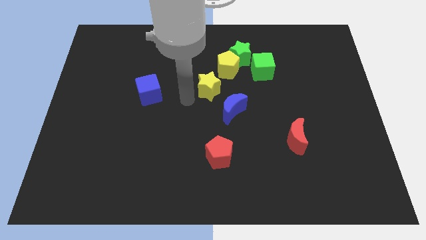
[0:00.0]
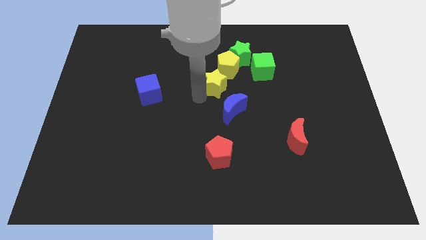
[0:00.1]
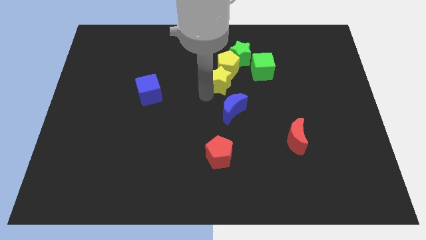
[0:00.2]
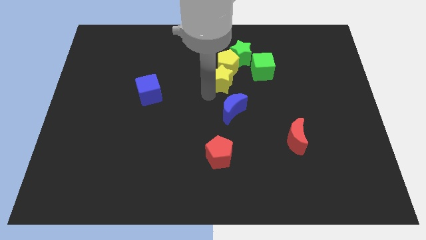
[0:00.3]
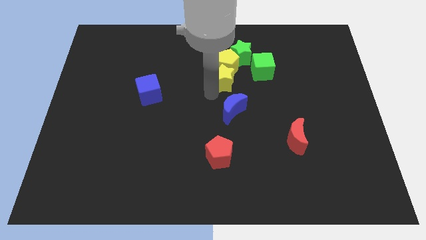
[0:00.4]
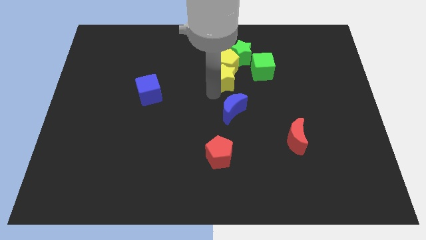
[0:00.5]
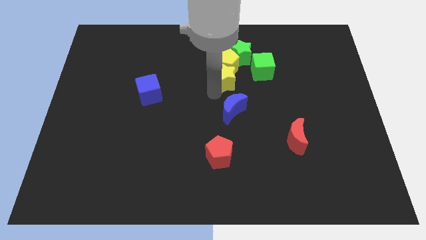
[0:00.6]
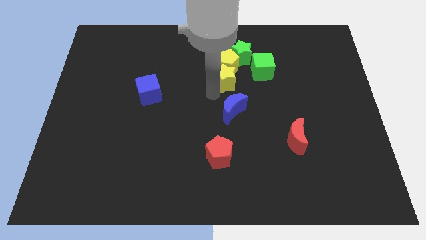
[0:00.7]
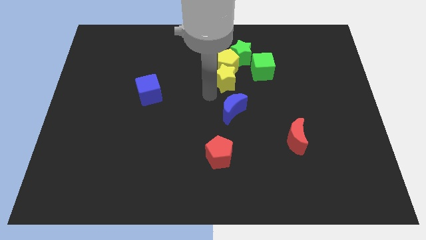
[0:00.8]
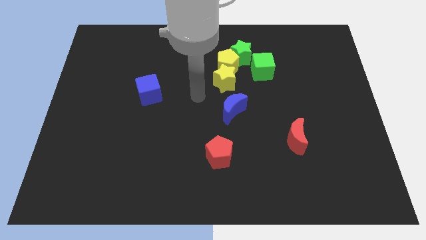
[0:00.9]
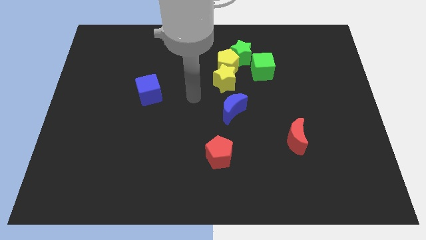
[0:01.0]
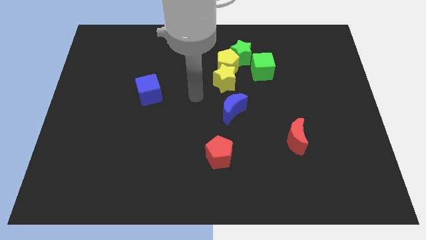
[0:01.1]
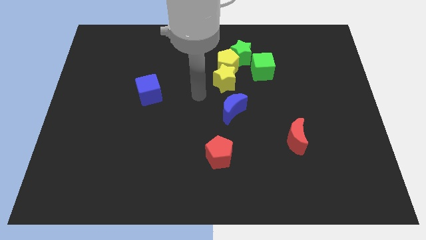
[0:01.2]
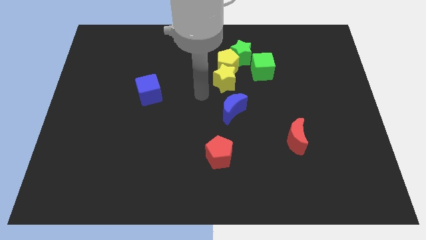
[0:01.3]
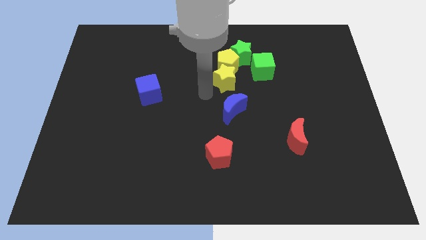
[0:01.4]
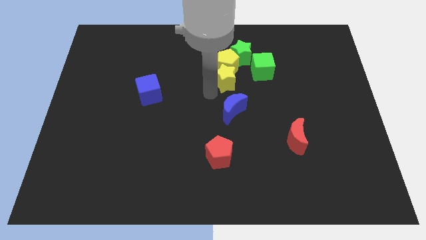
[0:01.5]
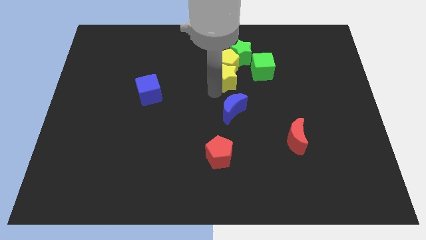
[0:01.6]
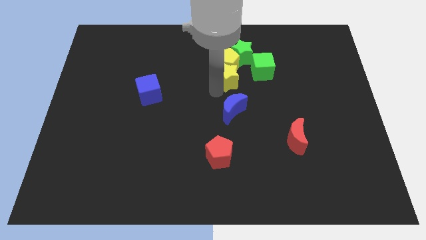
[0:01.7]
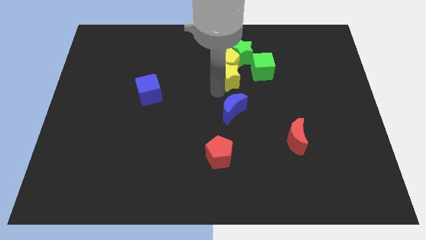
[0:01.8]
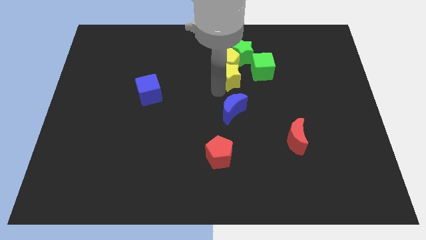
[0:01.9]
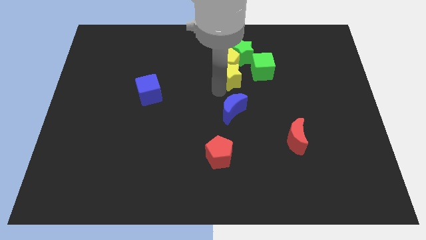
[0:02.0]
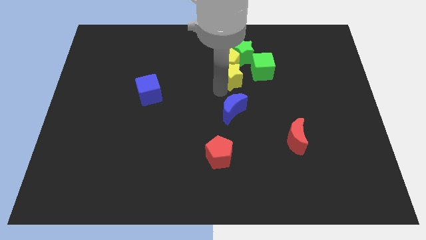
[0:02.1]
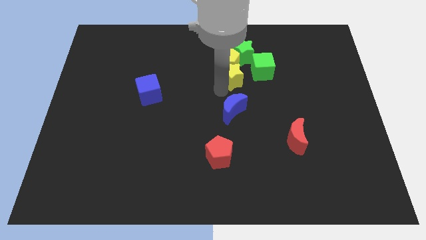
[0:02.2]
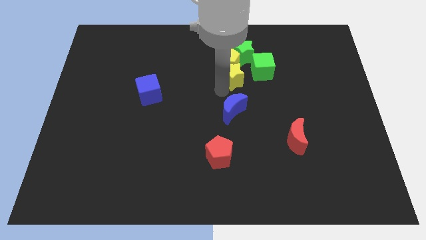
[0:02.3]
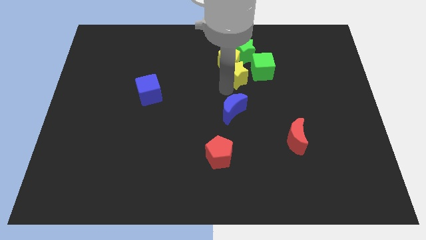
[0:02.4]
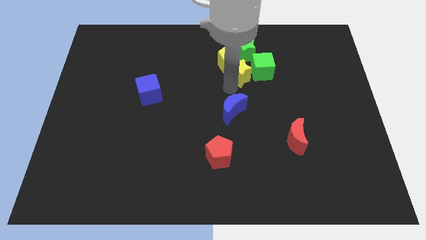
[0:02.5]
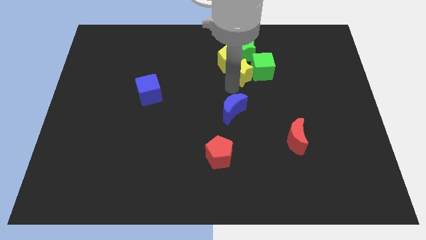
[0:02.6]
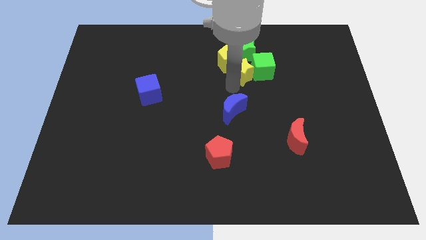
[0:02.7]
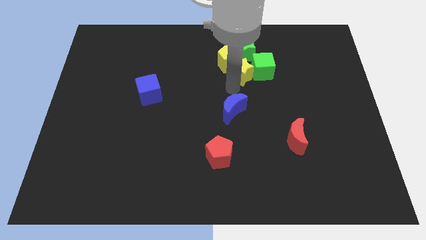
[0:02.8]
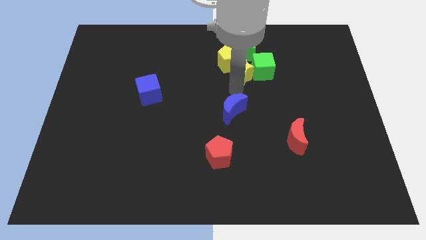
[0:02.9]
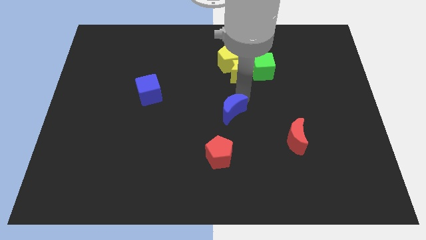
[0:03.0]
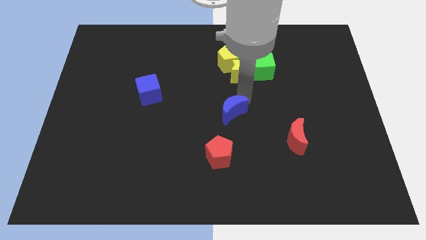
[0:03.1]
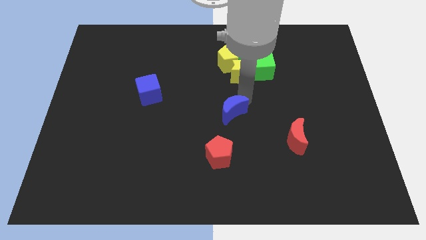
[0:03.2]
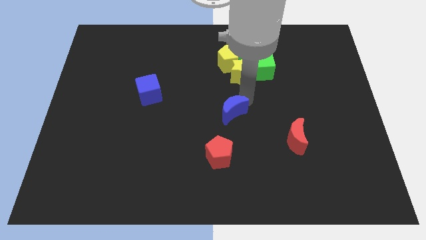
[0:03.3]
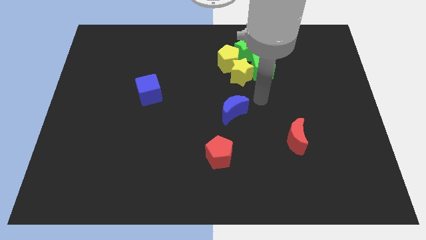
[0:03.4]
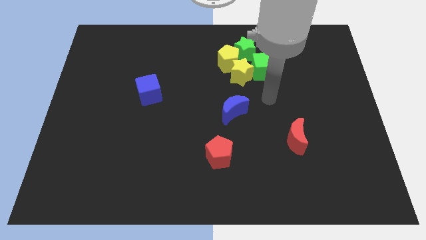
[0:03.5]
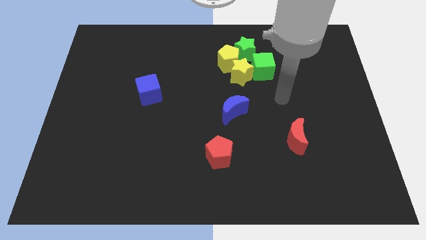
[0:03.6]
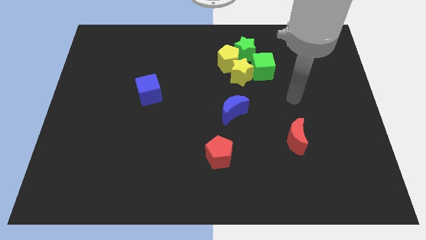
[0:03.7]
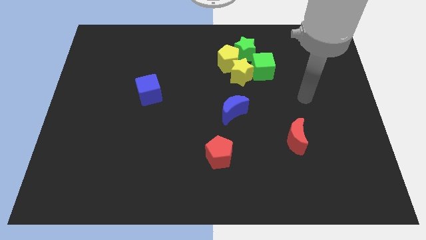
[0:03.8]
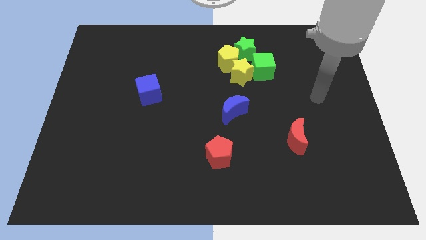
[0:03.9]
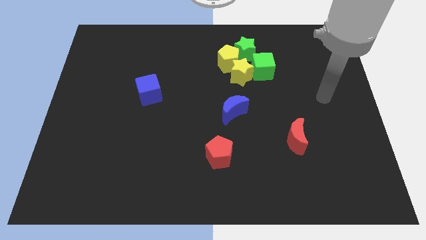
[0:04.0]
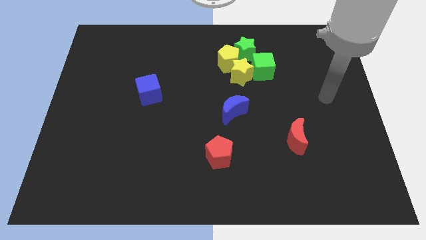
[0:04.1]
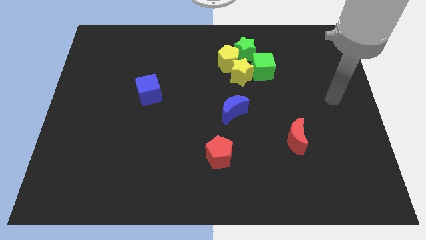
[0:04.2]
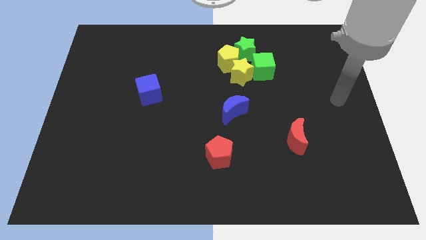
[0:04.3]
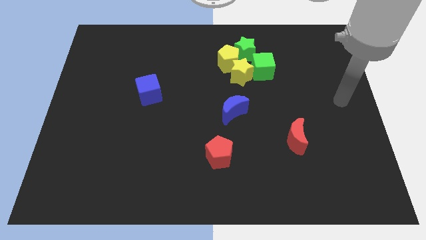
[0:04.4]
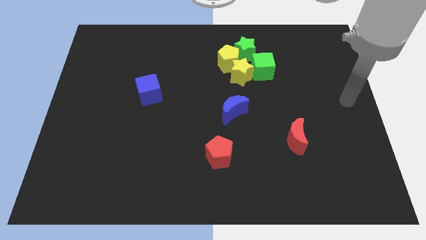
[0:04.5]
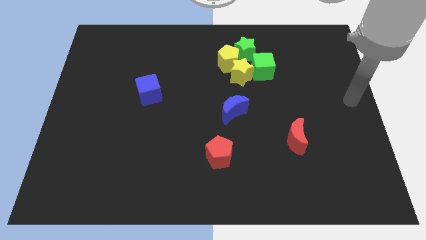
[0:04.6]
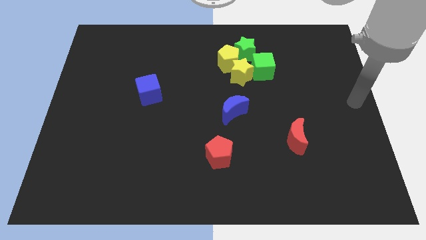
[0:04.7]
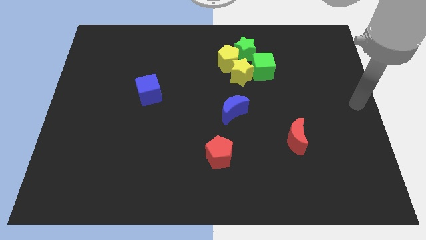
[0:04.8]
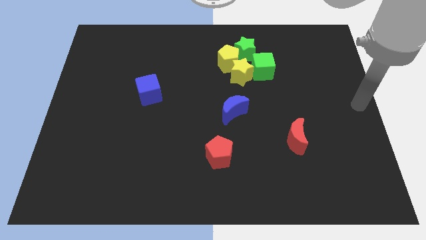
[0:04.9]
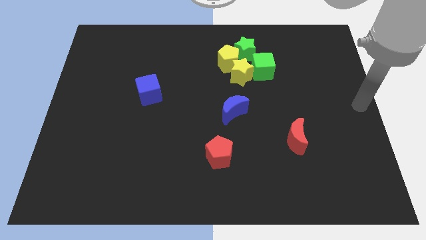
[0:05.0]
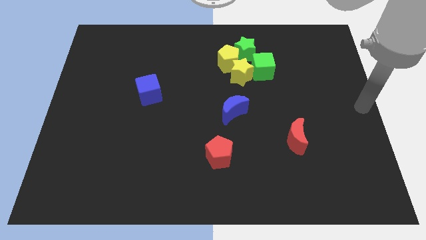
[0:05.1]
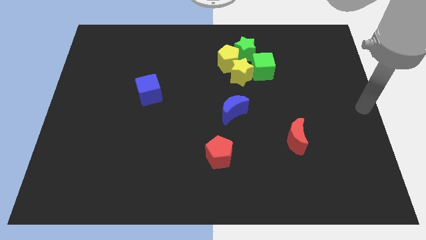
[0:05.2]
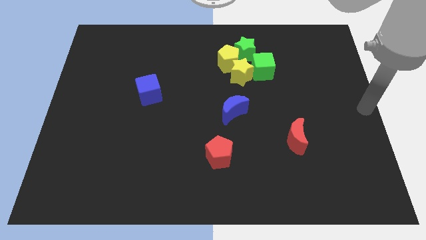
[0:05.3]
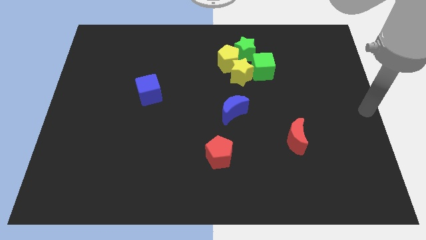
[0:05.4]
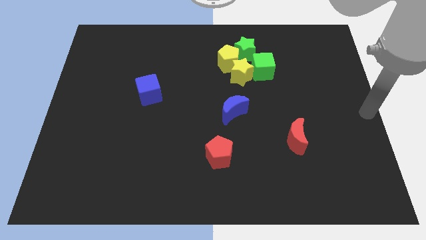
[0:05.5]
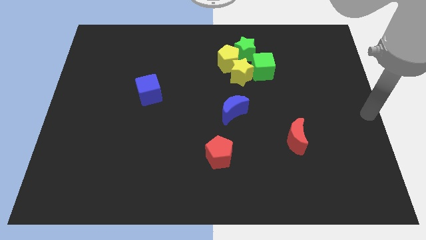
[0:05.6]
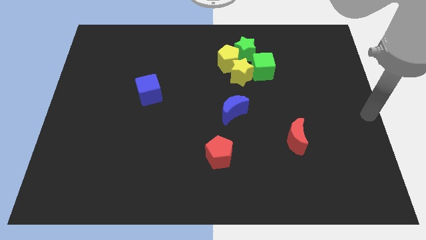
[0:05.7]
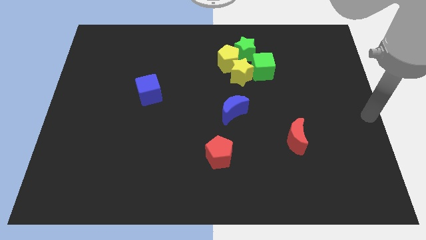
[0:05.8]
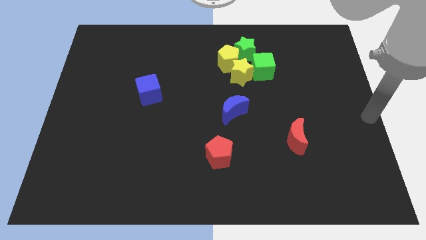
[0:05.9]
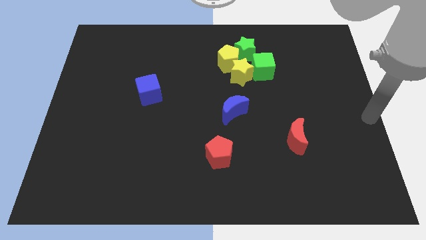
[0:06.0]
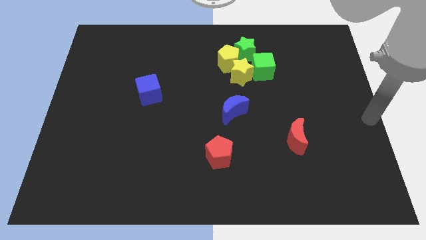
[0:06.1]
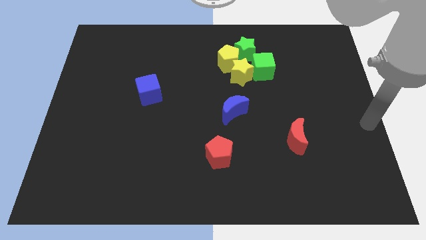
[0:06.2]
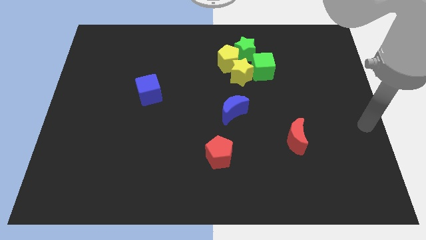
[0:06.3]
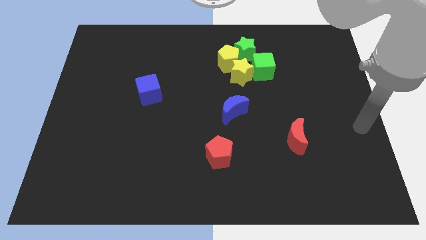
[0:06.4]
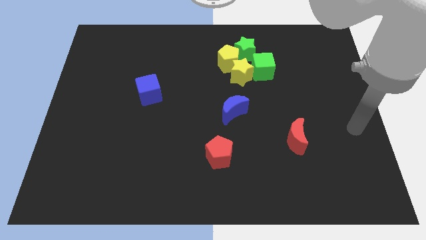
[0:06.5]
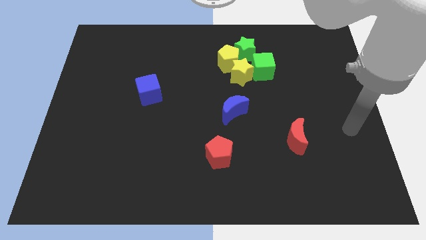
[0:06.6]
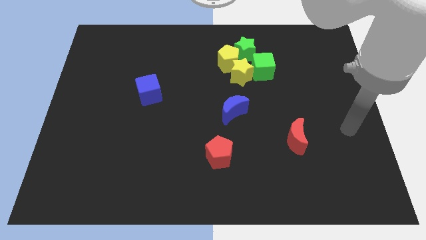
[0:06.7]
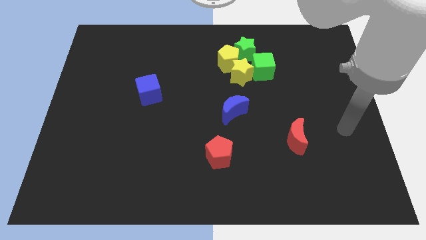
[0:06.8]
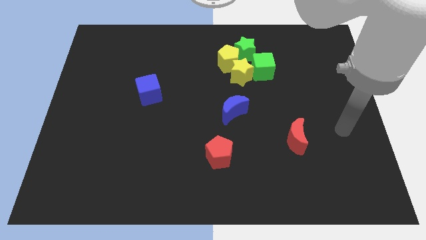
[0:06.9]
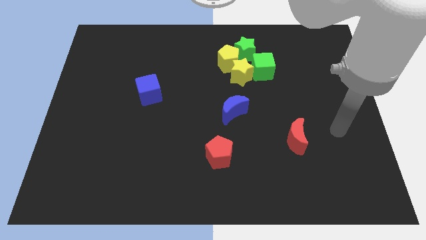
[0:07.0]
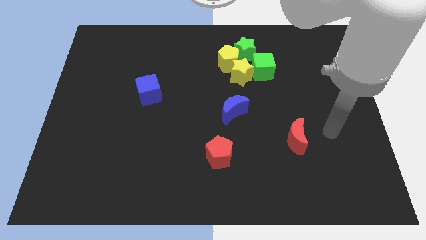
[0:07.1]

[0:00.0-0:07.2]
push the yellow star in between to the yellow pentagon and green cube

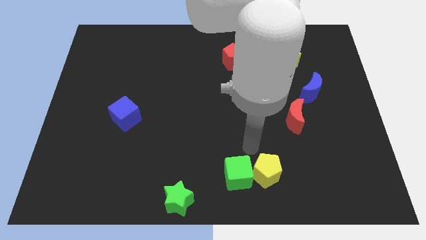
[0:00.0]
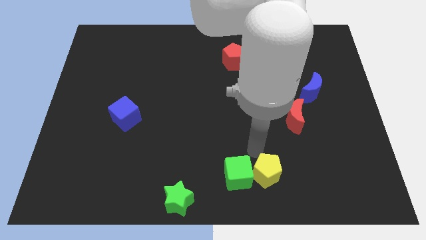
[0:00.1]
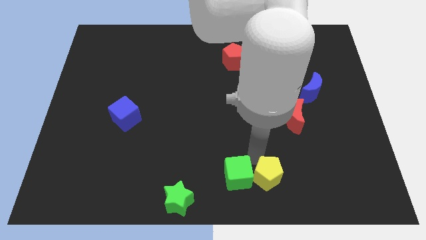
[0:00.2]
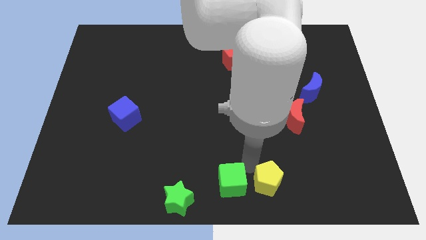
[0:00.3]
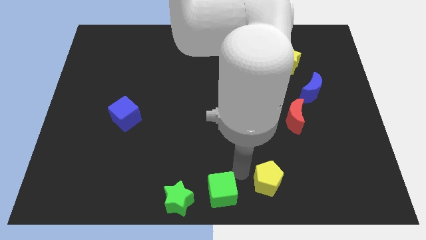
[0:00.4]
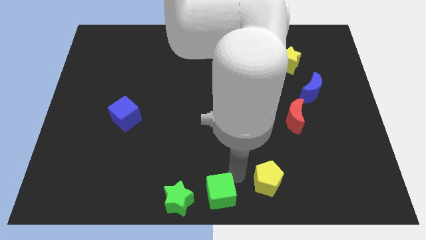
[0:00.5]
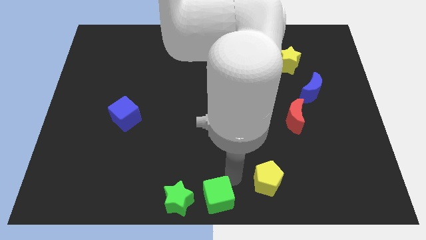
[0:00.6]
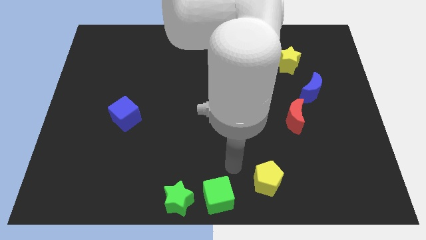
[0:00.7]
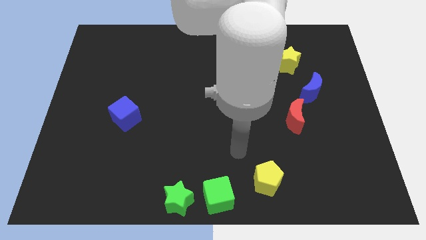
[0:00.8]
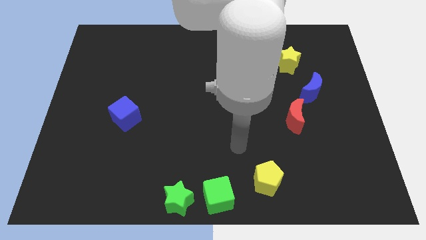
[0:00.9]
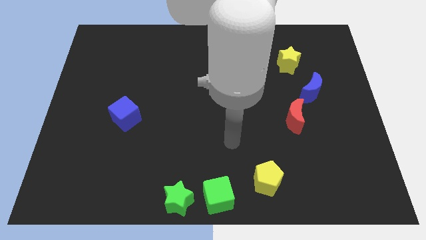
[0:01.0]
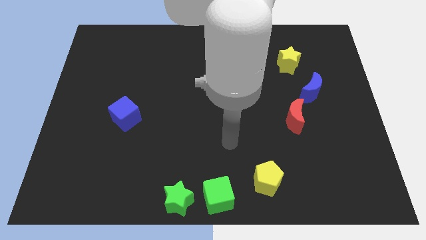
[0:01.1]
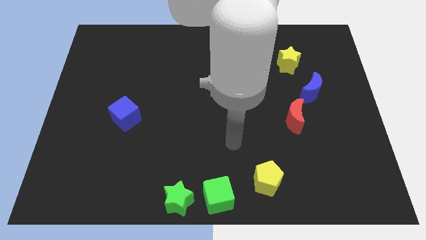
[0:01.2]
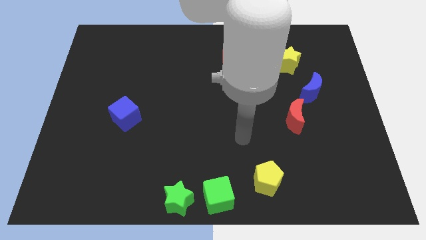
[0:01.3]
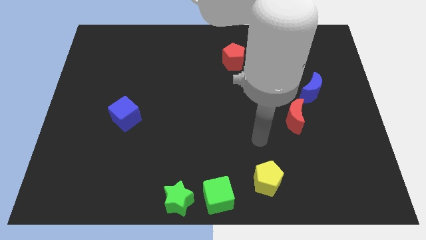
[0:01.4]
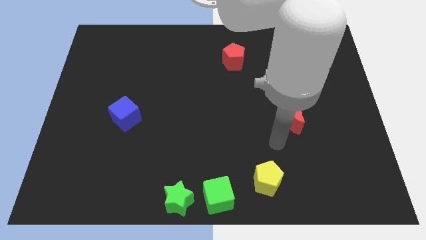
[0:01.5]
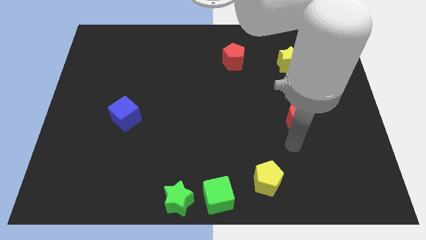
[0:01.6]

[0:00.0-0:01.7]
push the green cube to the right of the green star
